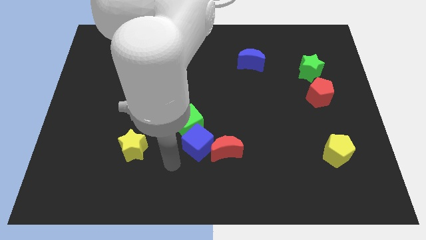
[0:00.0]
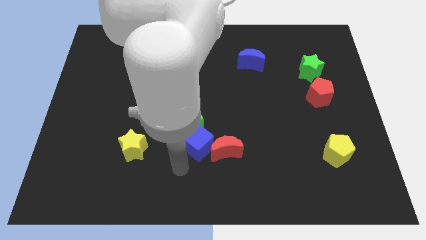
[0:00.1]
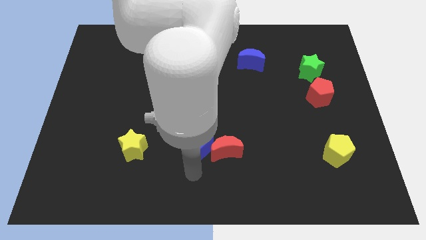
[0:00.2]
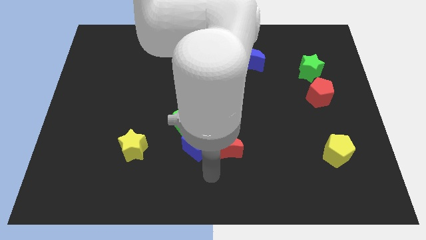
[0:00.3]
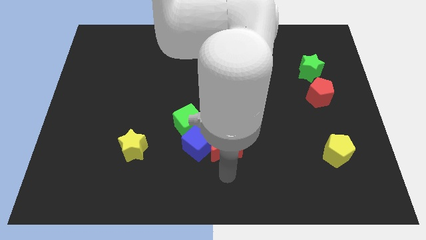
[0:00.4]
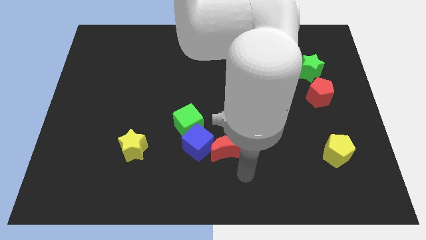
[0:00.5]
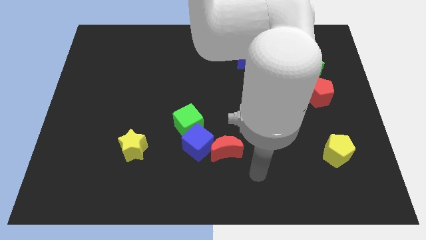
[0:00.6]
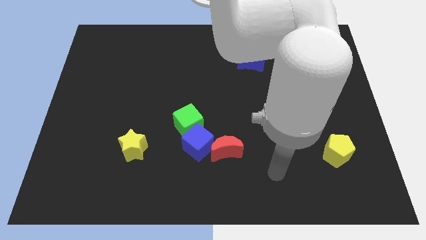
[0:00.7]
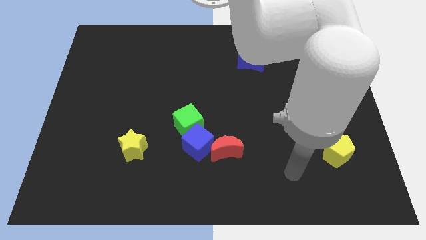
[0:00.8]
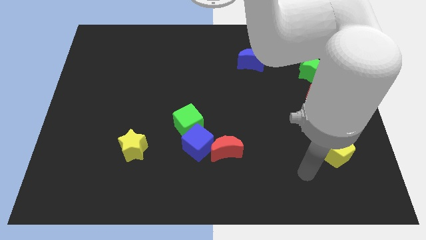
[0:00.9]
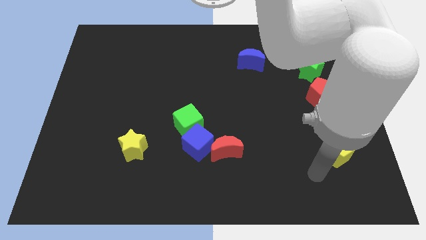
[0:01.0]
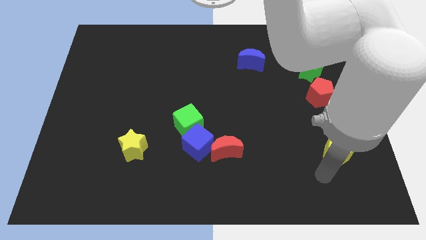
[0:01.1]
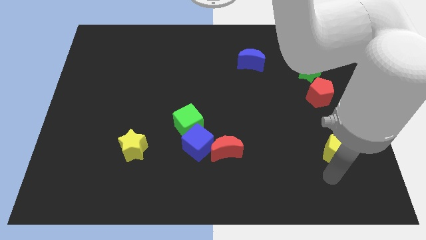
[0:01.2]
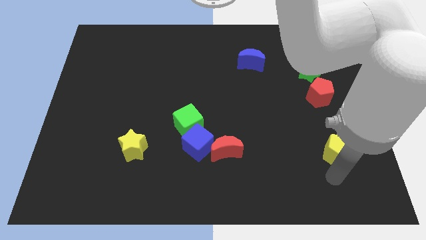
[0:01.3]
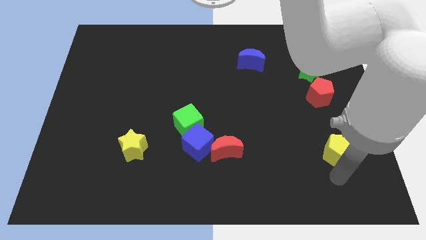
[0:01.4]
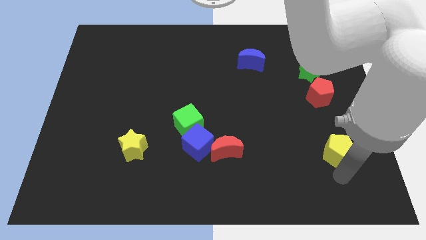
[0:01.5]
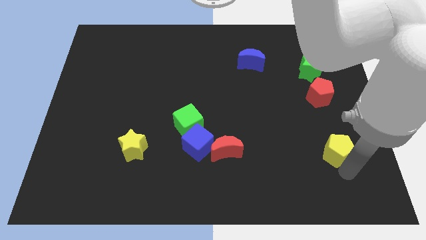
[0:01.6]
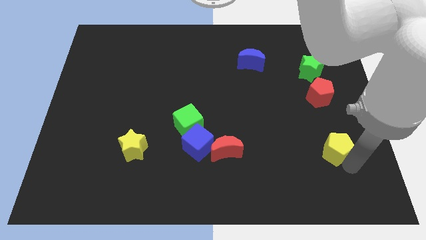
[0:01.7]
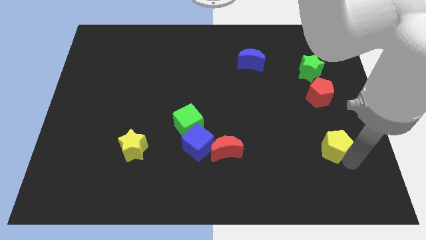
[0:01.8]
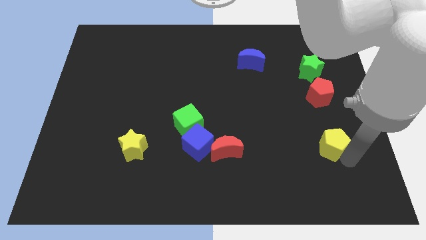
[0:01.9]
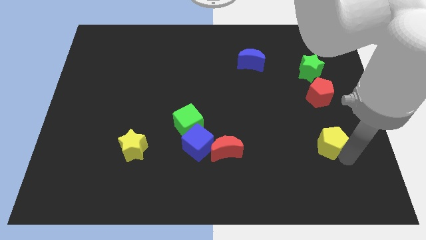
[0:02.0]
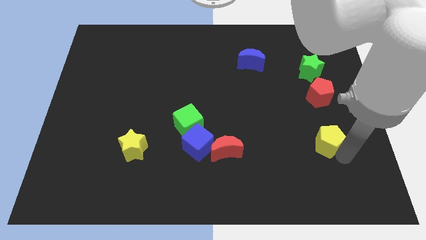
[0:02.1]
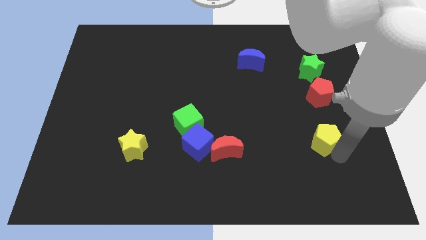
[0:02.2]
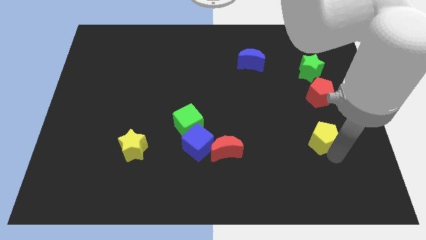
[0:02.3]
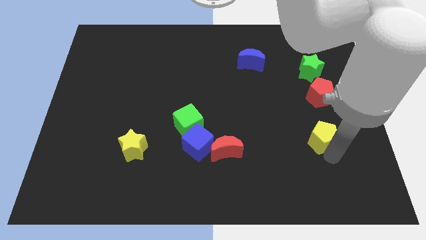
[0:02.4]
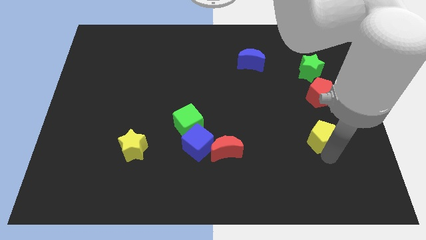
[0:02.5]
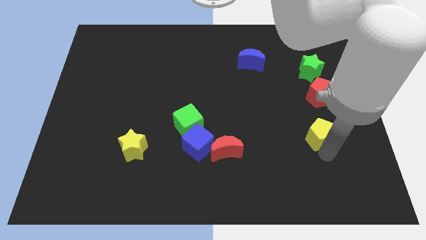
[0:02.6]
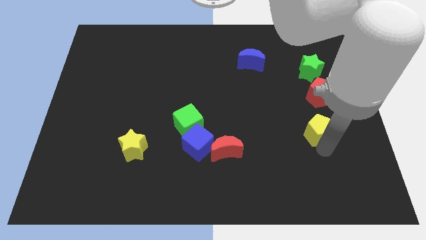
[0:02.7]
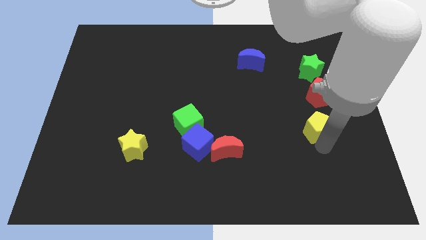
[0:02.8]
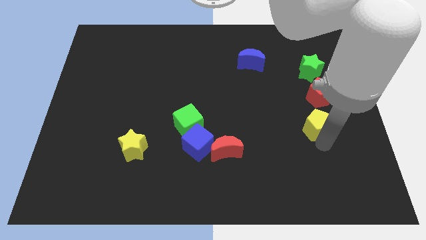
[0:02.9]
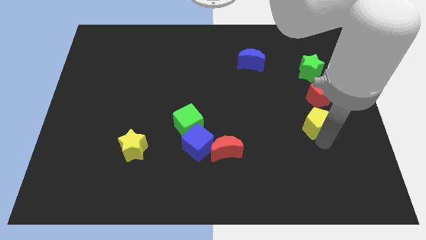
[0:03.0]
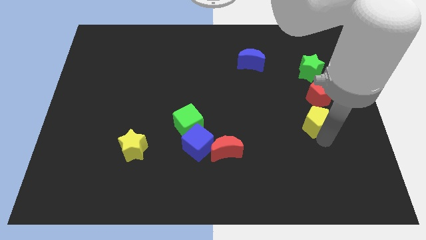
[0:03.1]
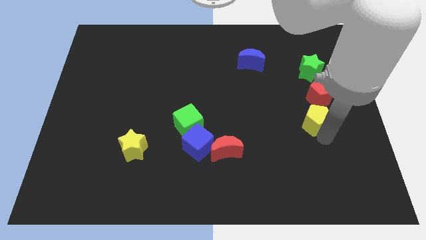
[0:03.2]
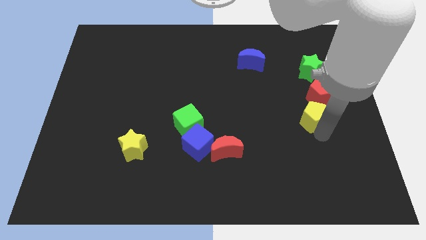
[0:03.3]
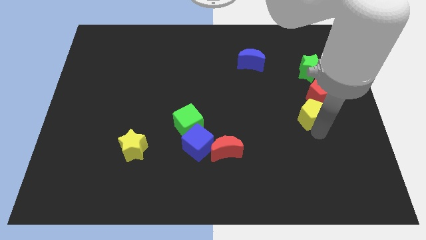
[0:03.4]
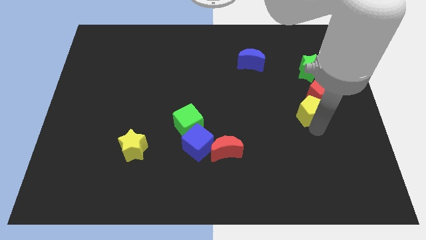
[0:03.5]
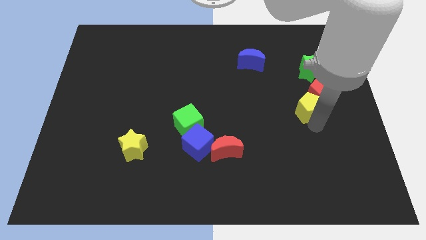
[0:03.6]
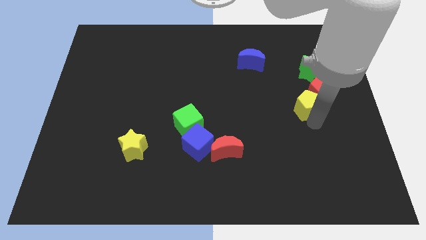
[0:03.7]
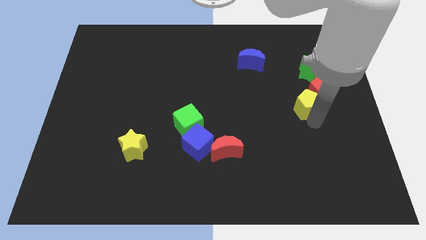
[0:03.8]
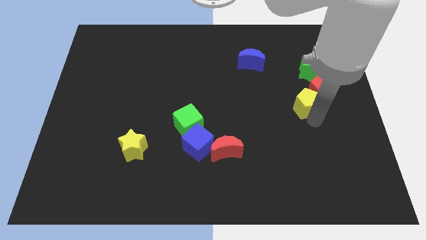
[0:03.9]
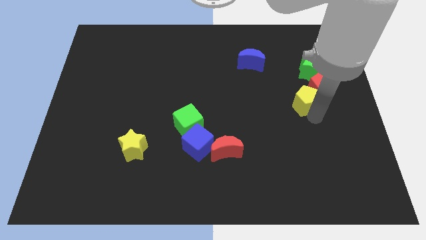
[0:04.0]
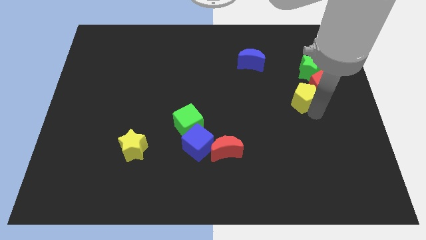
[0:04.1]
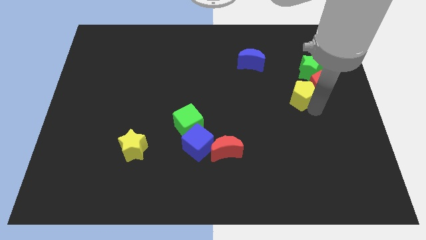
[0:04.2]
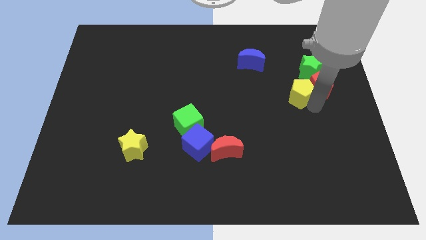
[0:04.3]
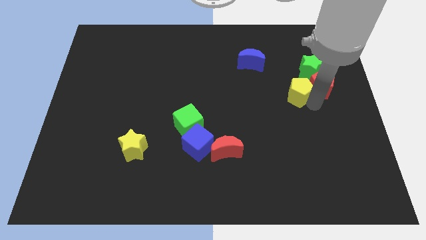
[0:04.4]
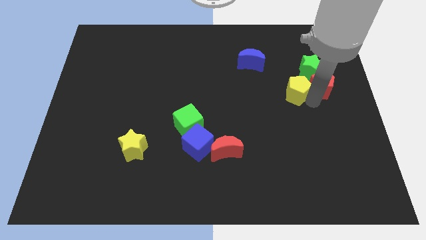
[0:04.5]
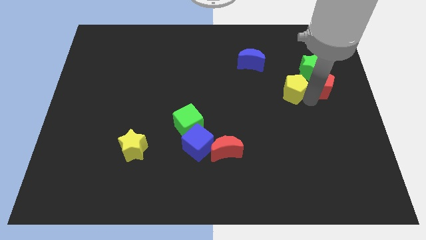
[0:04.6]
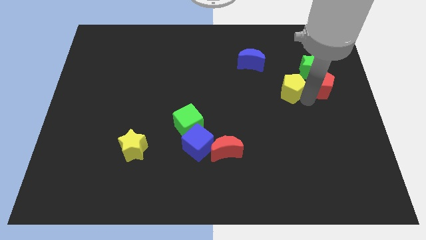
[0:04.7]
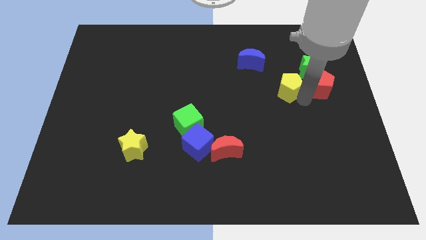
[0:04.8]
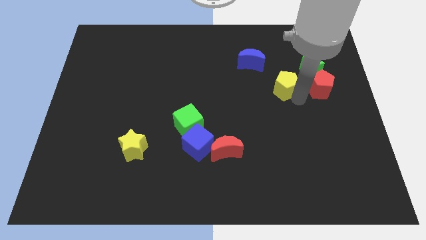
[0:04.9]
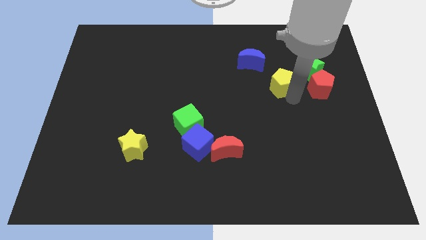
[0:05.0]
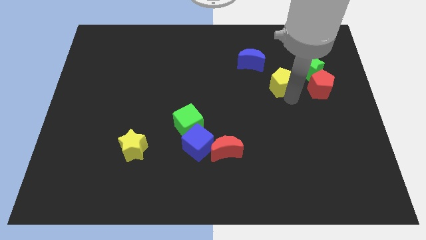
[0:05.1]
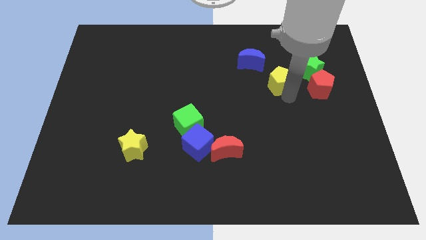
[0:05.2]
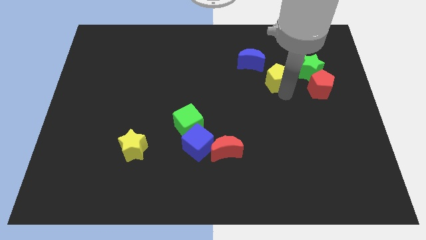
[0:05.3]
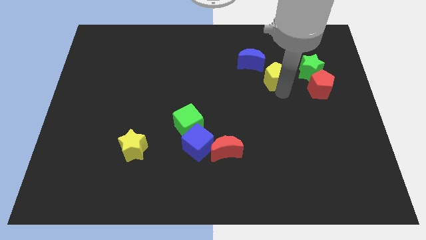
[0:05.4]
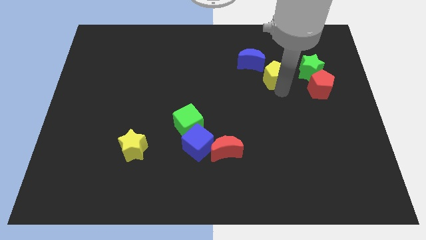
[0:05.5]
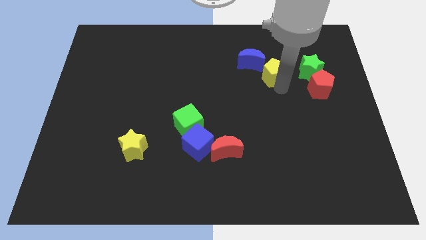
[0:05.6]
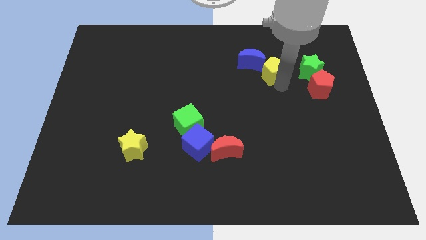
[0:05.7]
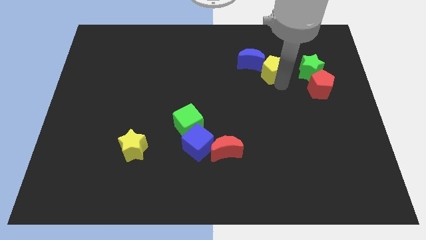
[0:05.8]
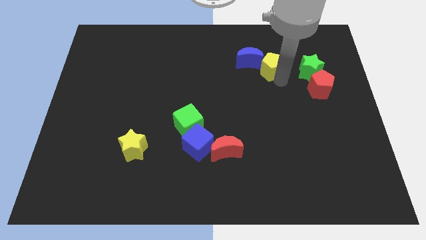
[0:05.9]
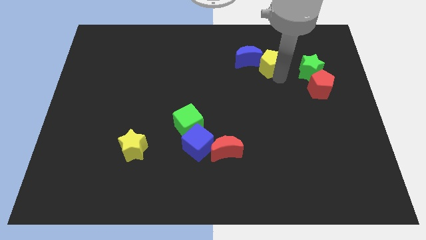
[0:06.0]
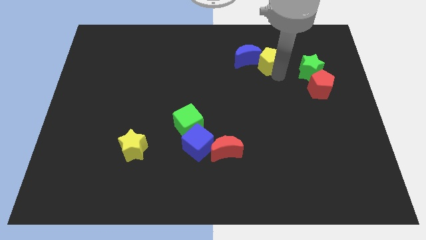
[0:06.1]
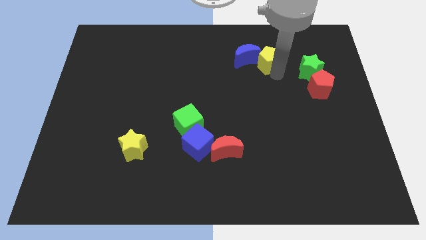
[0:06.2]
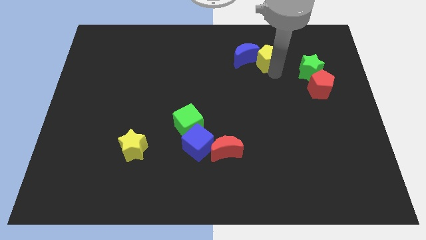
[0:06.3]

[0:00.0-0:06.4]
push the yellow pentagon to the blue moon

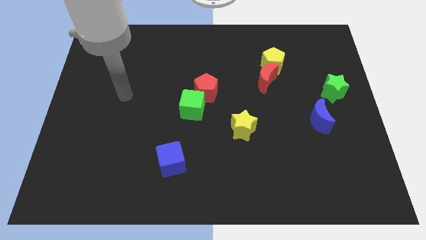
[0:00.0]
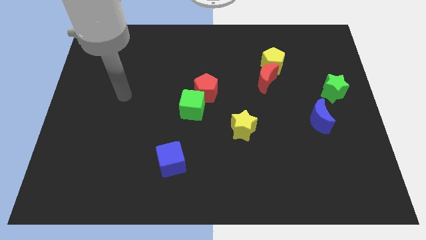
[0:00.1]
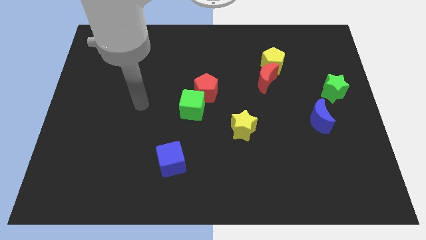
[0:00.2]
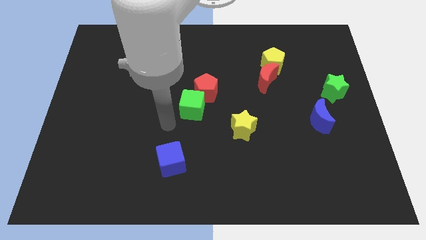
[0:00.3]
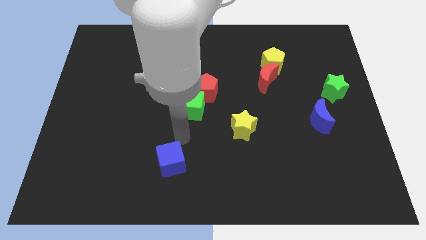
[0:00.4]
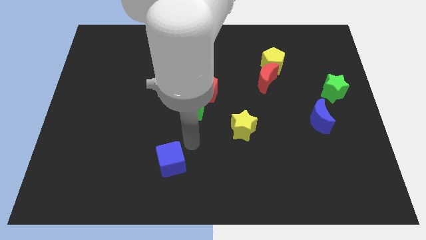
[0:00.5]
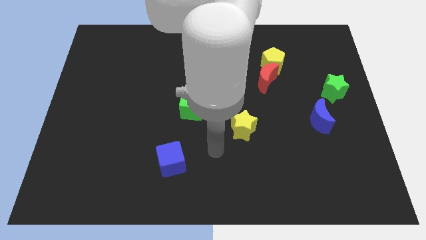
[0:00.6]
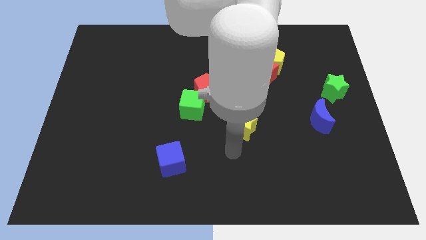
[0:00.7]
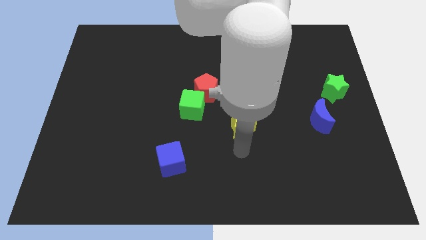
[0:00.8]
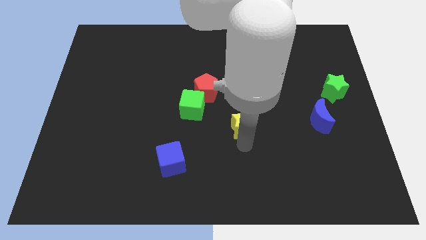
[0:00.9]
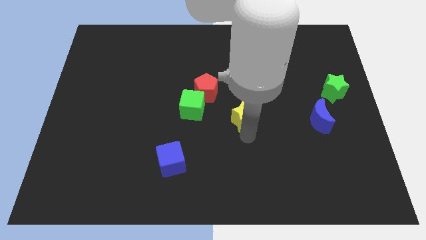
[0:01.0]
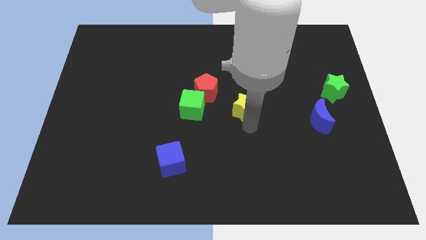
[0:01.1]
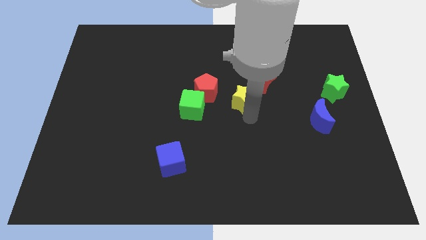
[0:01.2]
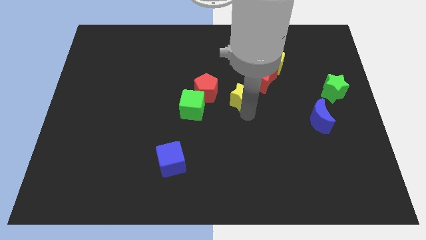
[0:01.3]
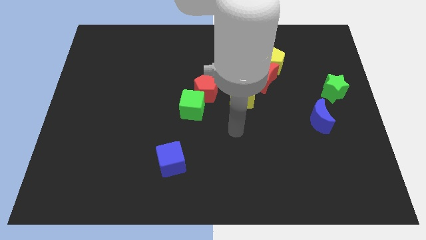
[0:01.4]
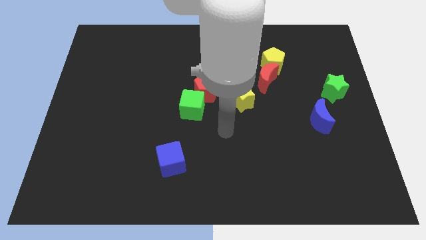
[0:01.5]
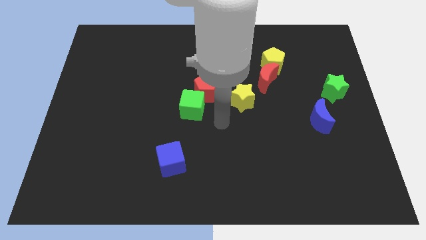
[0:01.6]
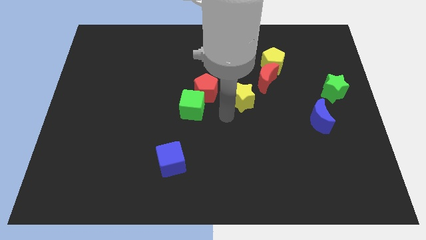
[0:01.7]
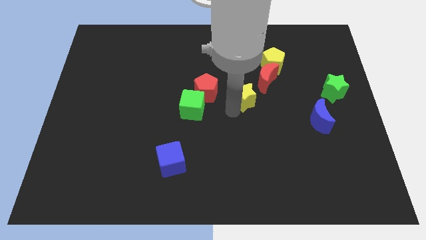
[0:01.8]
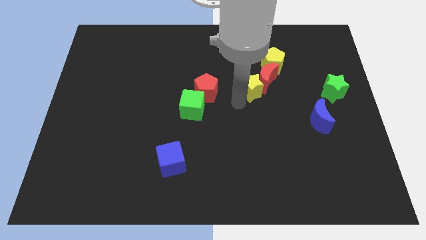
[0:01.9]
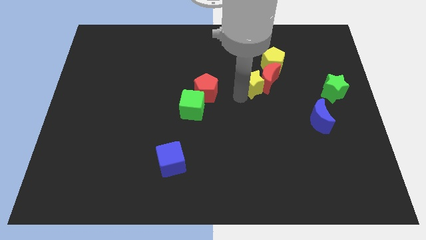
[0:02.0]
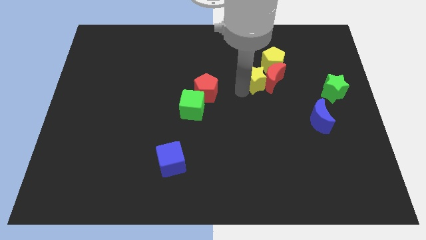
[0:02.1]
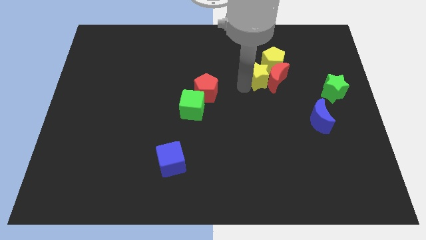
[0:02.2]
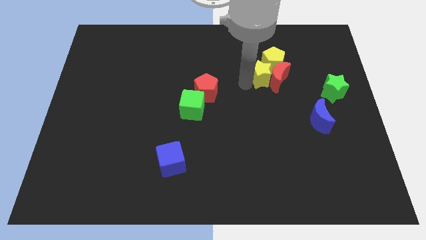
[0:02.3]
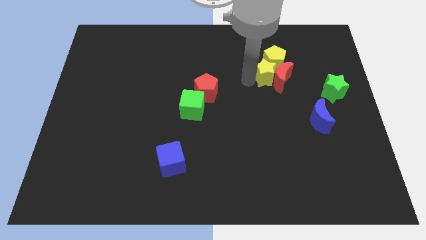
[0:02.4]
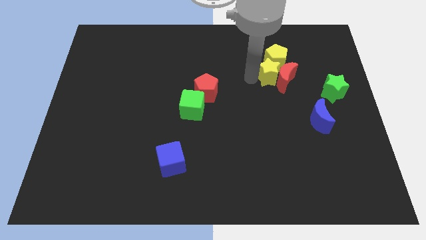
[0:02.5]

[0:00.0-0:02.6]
put the yellow star close to the yellow pentagon
